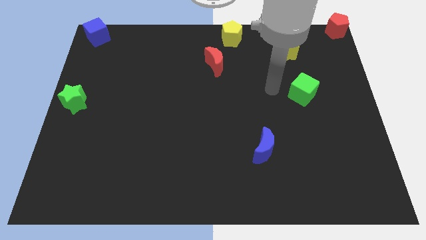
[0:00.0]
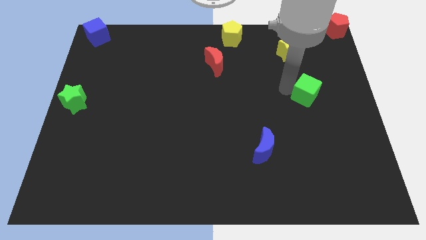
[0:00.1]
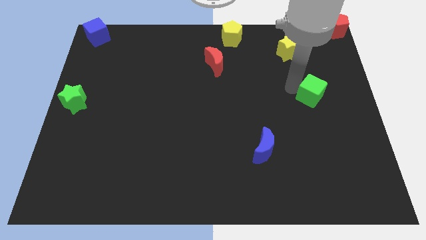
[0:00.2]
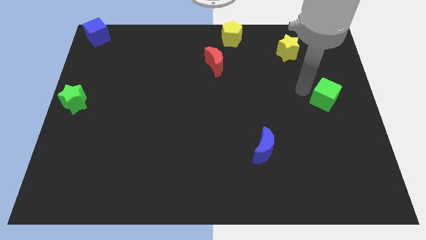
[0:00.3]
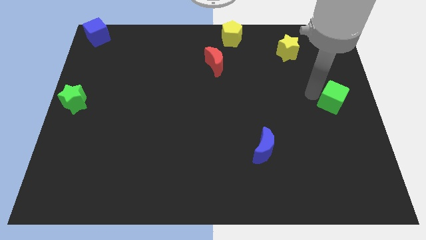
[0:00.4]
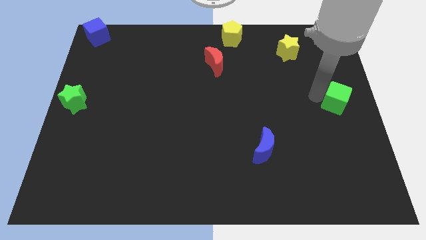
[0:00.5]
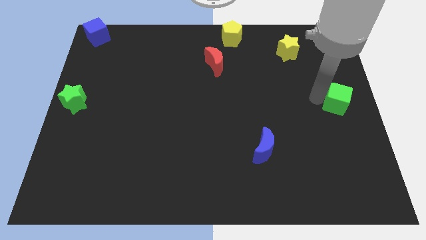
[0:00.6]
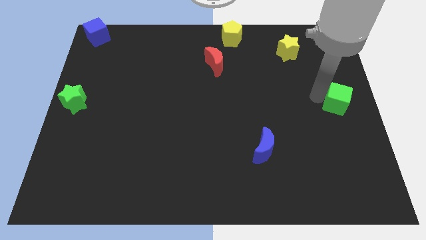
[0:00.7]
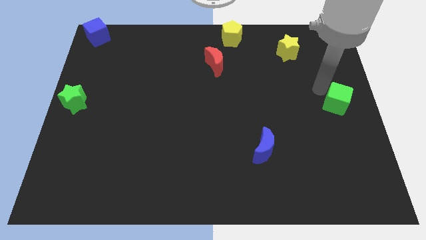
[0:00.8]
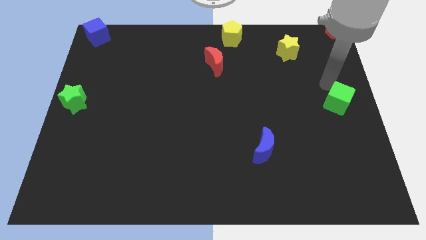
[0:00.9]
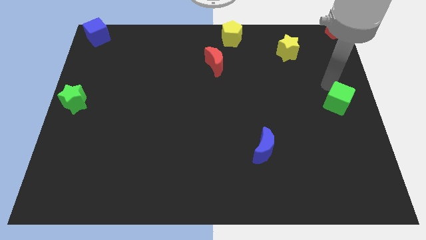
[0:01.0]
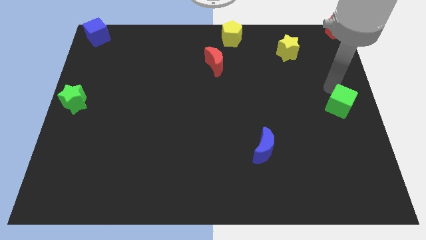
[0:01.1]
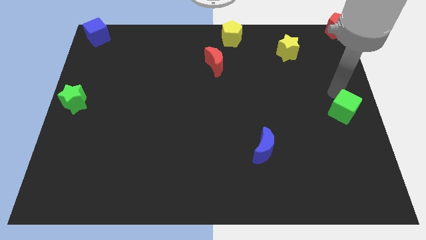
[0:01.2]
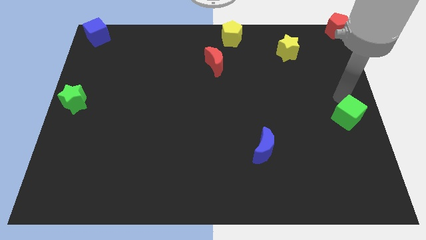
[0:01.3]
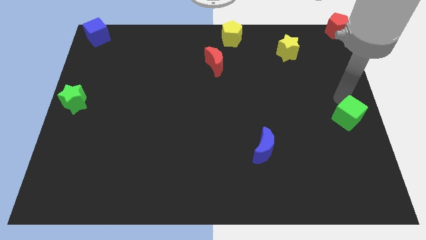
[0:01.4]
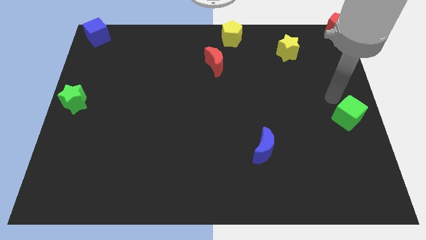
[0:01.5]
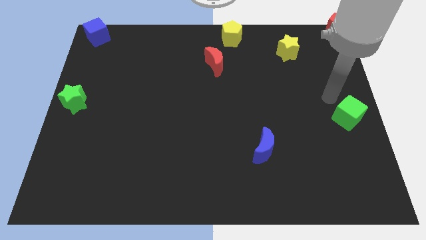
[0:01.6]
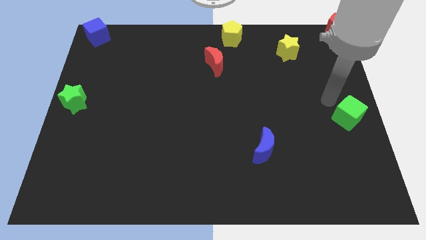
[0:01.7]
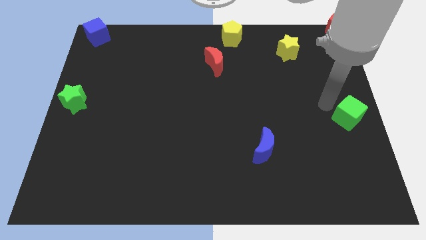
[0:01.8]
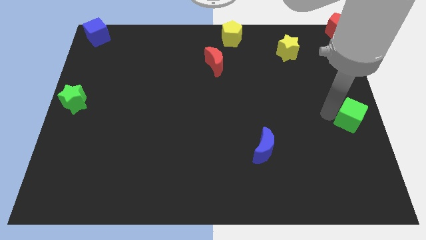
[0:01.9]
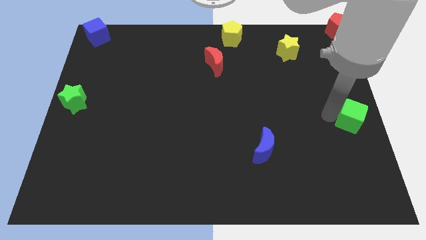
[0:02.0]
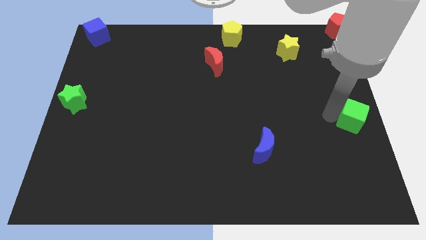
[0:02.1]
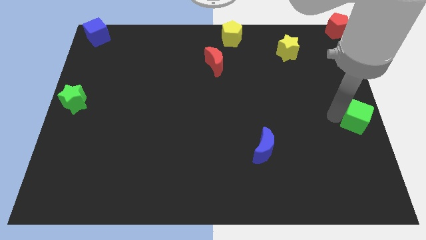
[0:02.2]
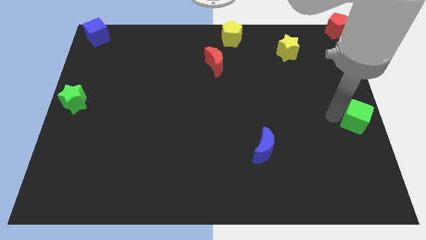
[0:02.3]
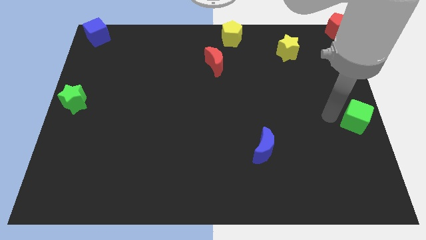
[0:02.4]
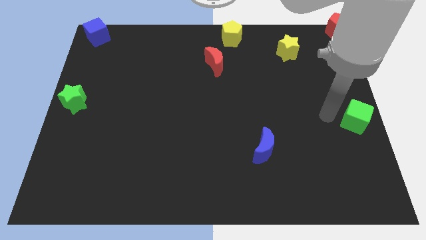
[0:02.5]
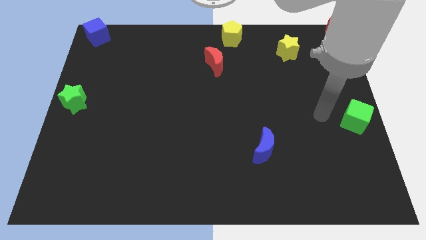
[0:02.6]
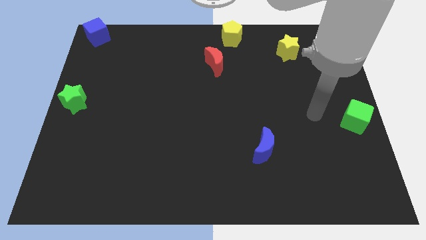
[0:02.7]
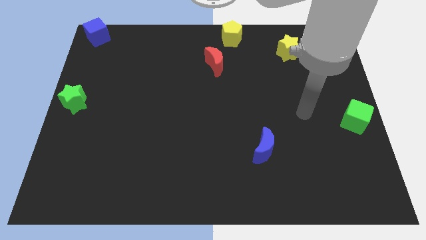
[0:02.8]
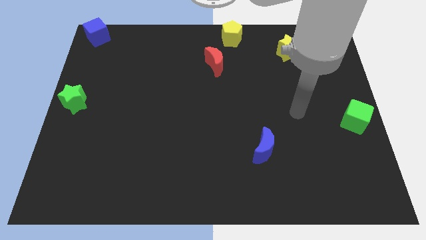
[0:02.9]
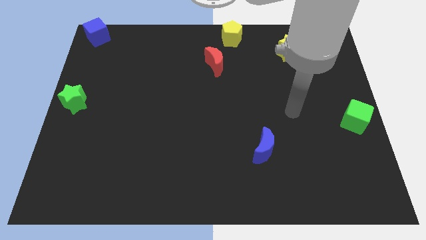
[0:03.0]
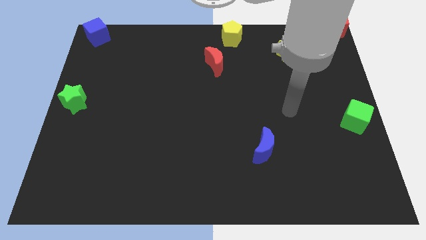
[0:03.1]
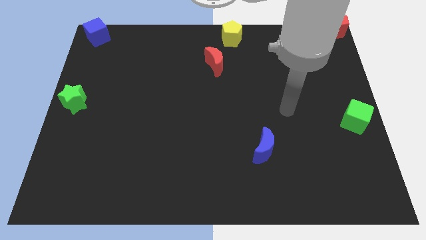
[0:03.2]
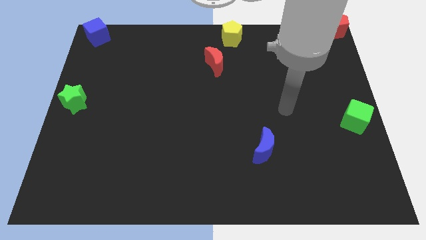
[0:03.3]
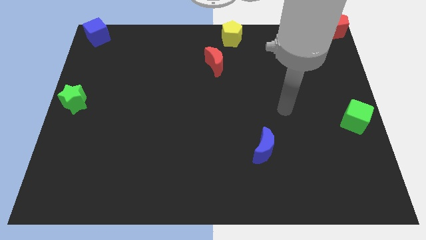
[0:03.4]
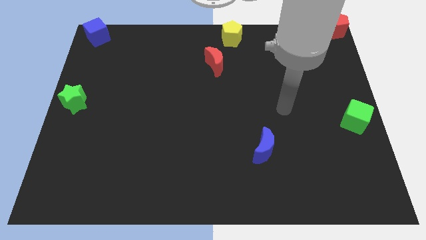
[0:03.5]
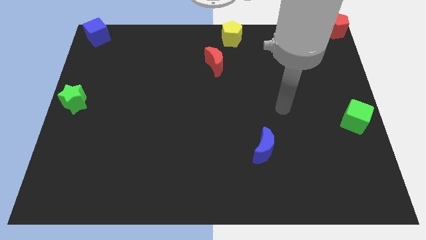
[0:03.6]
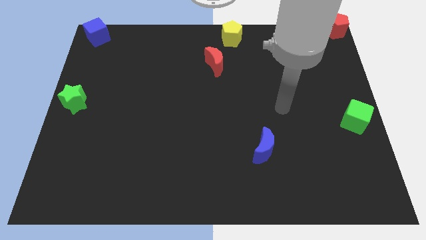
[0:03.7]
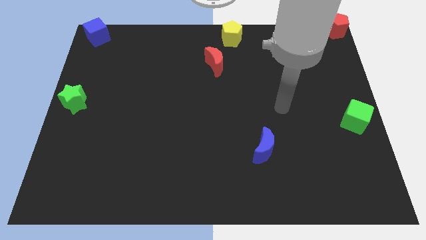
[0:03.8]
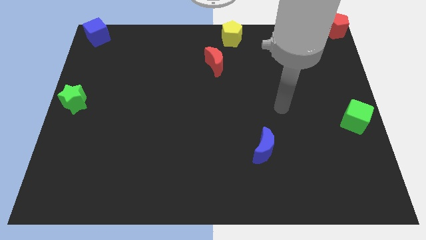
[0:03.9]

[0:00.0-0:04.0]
move the green cube to the right center of the board

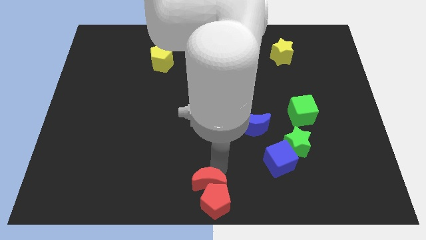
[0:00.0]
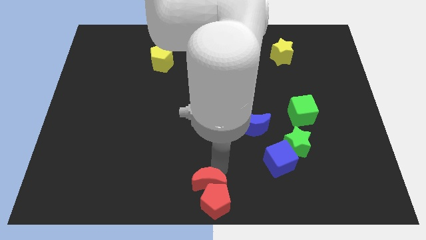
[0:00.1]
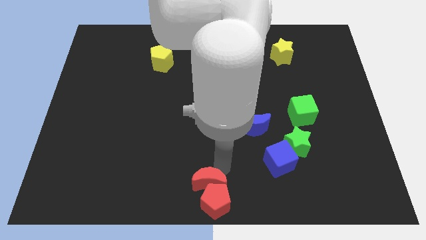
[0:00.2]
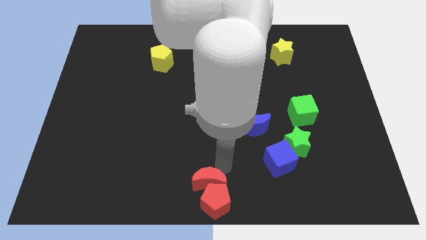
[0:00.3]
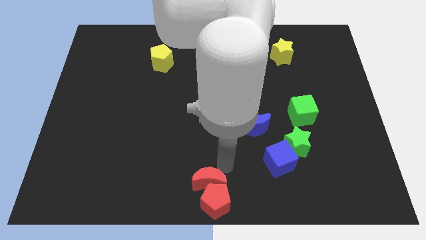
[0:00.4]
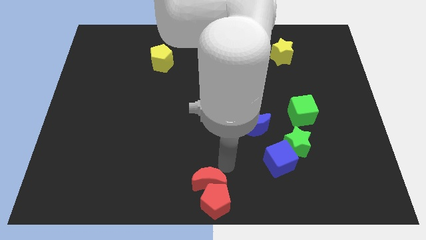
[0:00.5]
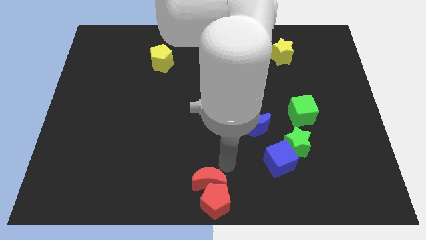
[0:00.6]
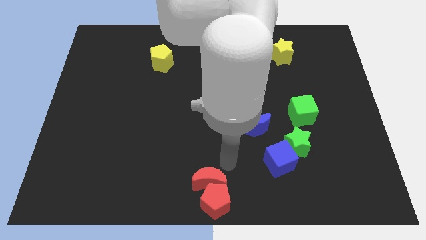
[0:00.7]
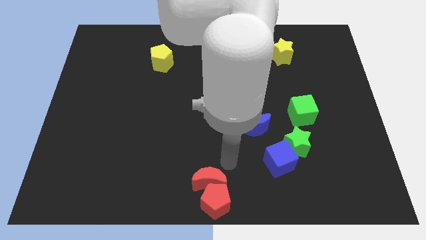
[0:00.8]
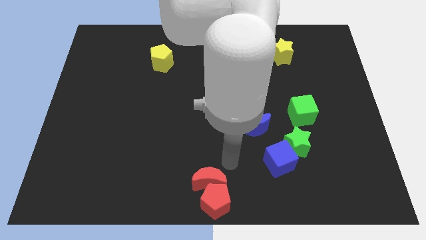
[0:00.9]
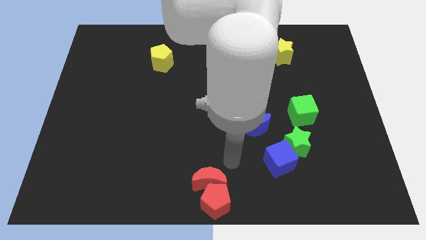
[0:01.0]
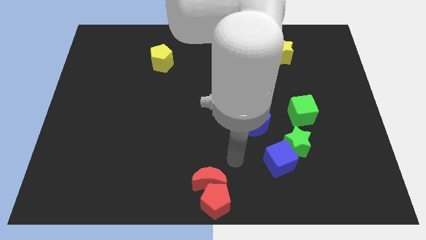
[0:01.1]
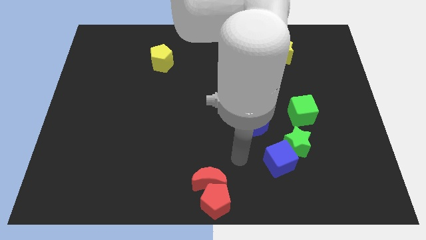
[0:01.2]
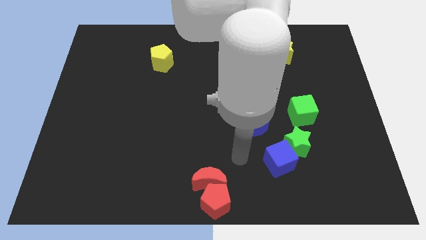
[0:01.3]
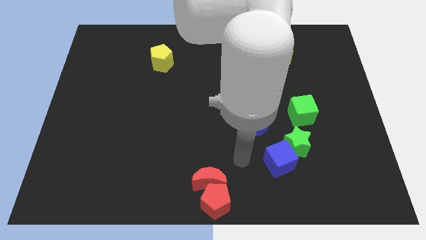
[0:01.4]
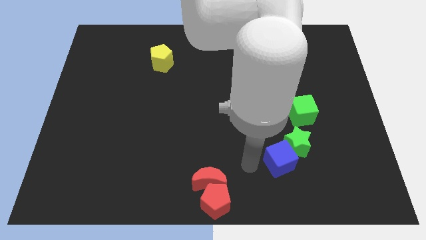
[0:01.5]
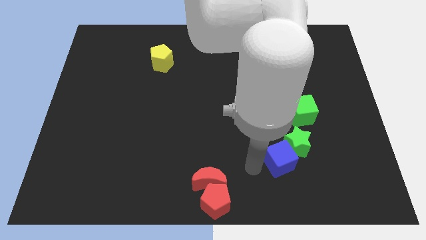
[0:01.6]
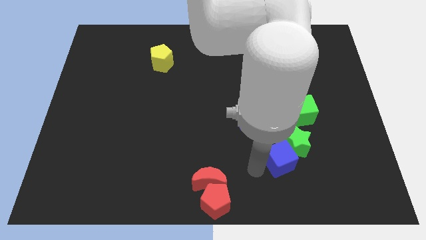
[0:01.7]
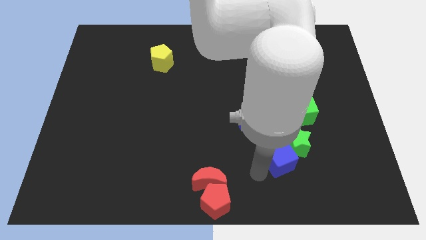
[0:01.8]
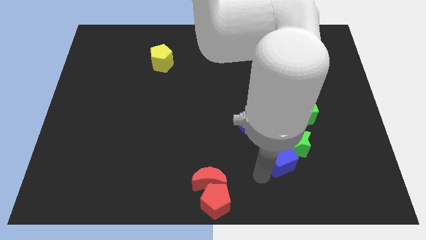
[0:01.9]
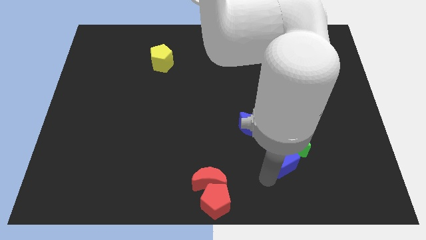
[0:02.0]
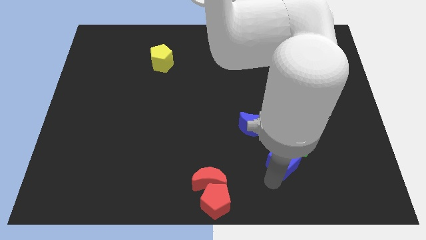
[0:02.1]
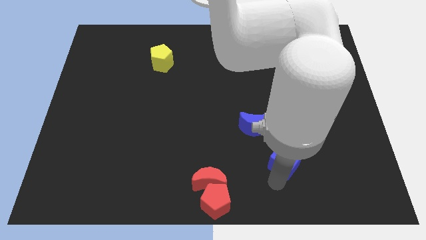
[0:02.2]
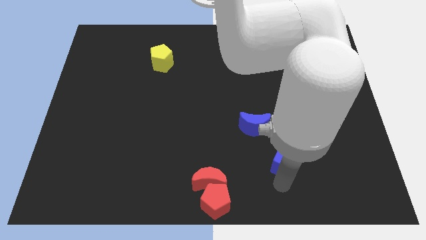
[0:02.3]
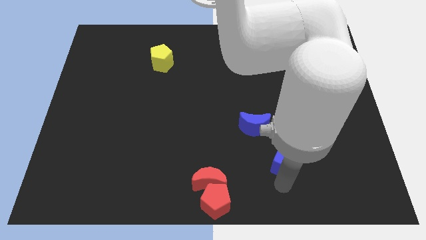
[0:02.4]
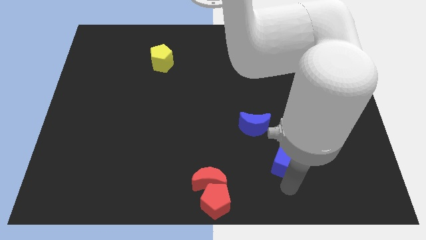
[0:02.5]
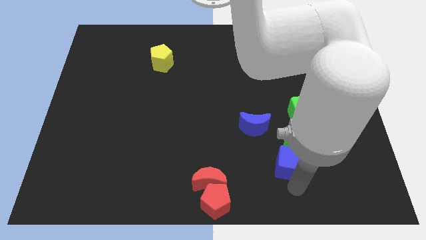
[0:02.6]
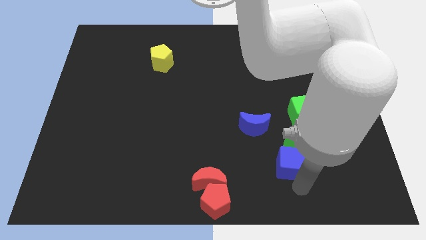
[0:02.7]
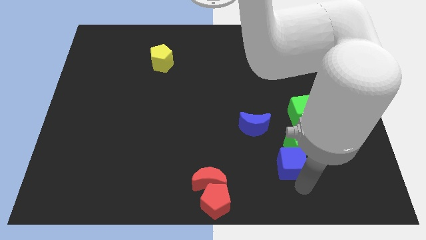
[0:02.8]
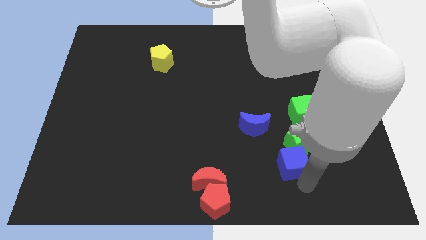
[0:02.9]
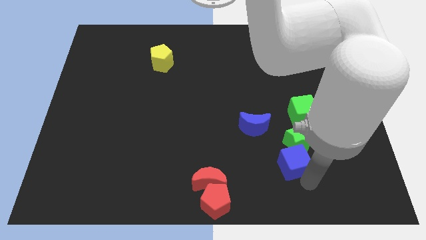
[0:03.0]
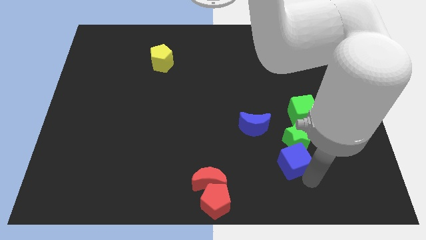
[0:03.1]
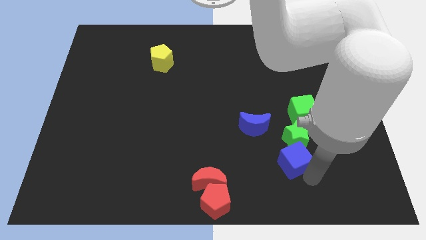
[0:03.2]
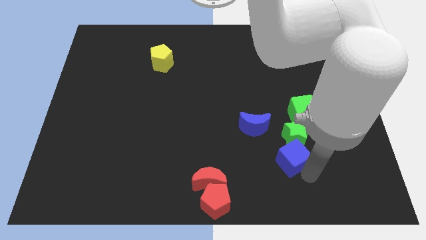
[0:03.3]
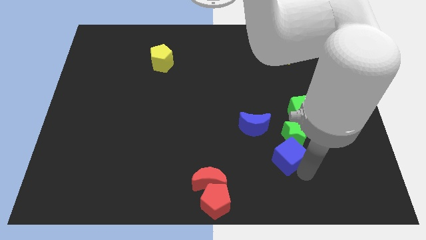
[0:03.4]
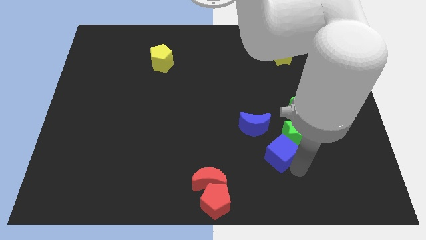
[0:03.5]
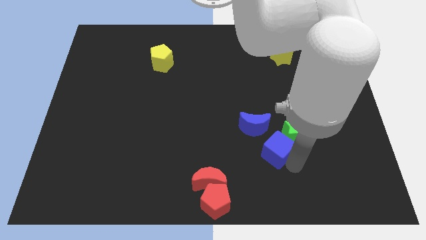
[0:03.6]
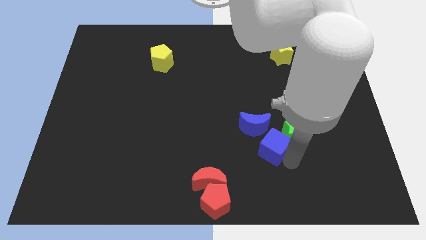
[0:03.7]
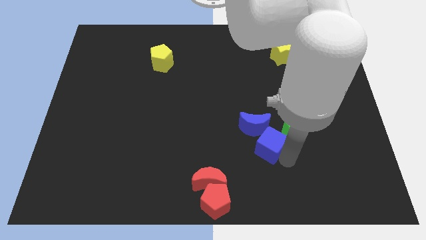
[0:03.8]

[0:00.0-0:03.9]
place the blue cube below of the green star

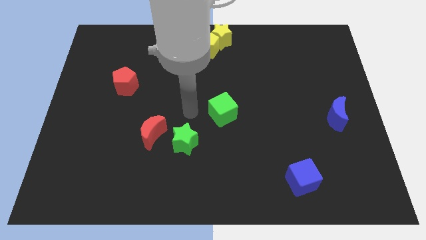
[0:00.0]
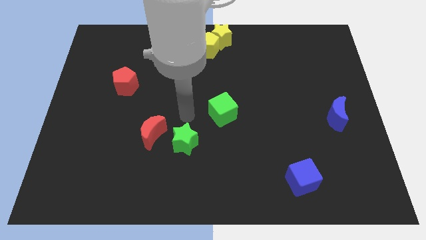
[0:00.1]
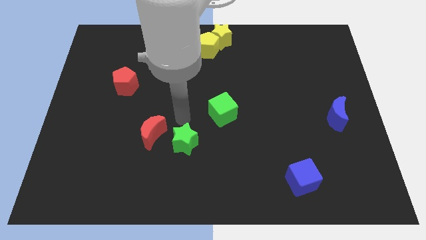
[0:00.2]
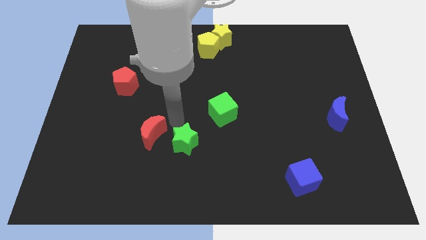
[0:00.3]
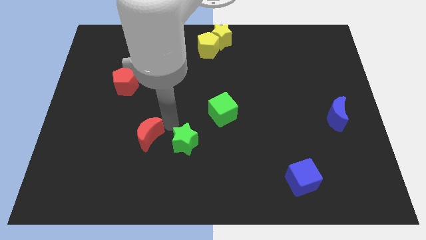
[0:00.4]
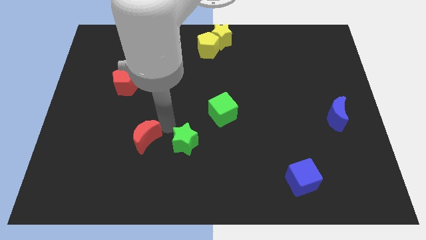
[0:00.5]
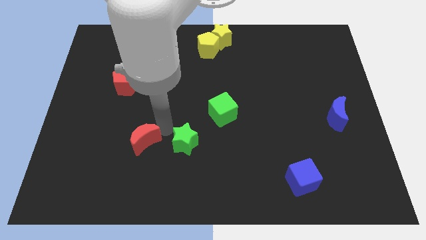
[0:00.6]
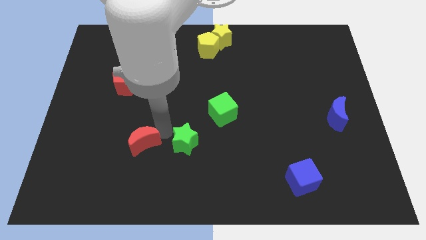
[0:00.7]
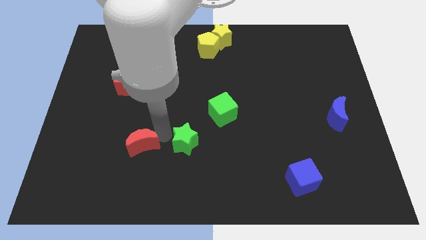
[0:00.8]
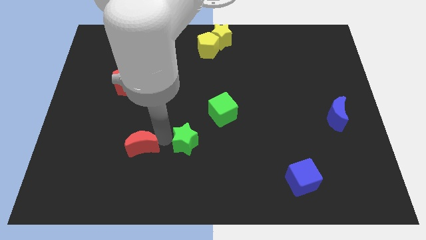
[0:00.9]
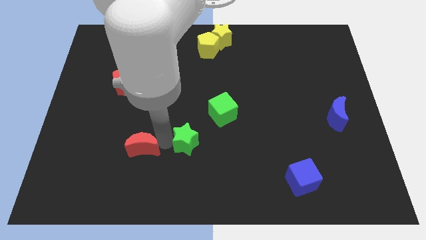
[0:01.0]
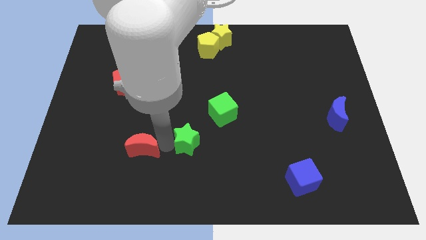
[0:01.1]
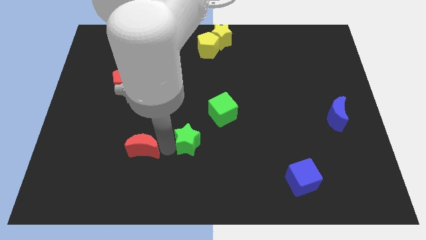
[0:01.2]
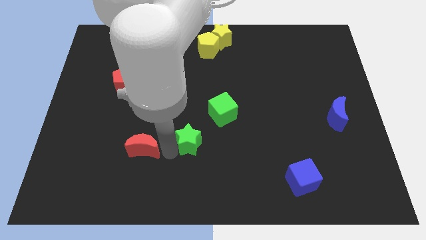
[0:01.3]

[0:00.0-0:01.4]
move the red moon to the left of the green star

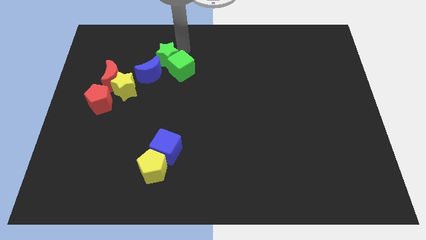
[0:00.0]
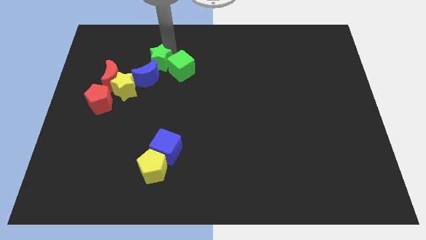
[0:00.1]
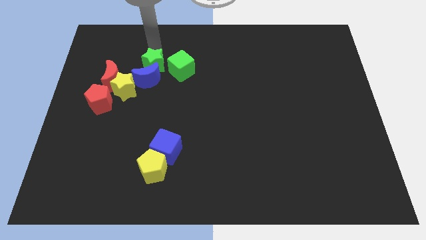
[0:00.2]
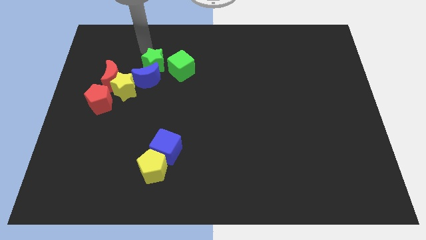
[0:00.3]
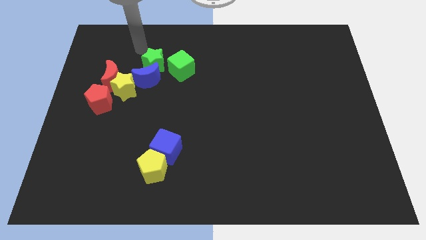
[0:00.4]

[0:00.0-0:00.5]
push the green star into the blue moon
